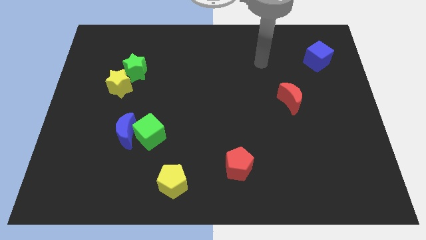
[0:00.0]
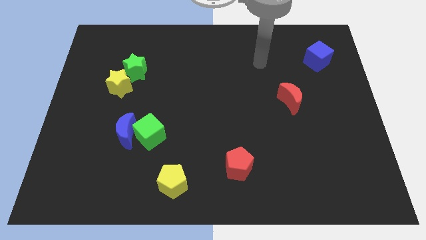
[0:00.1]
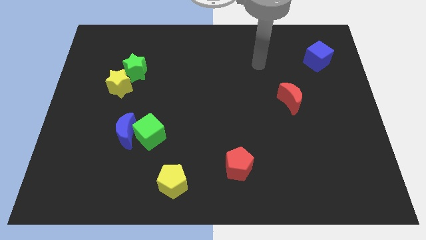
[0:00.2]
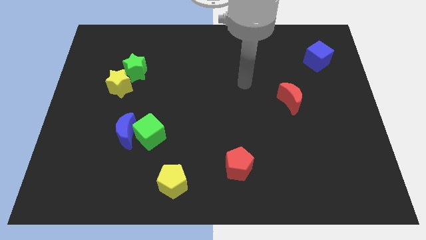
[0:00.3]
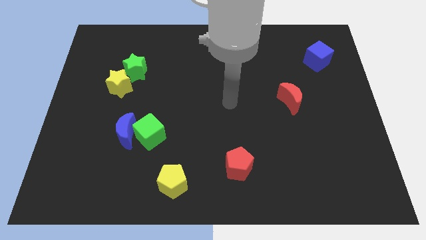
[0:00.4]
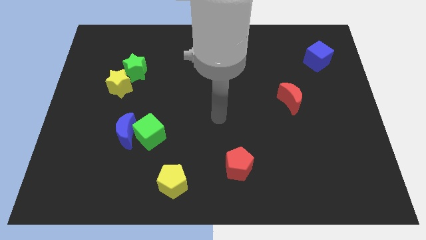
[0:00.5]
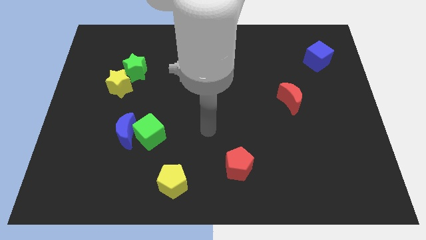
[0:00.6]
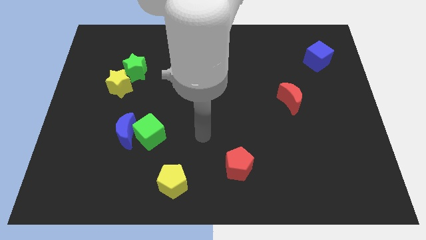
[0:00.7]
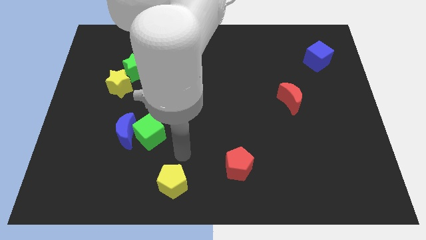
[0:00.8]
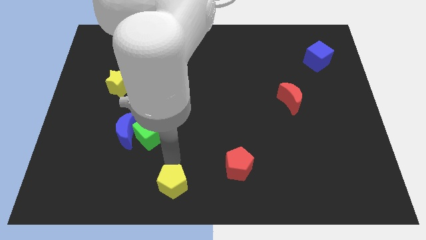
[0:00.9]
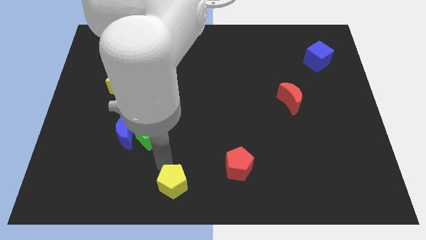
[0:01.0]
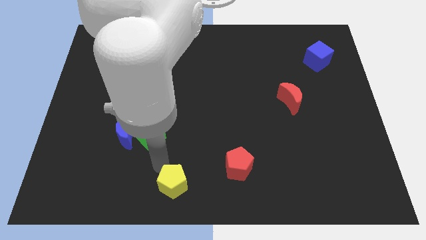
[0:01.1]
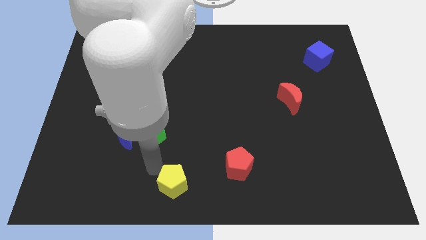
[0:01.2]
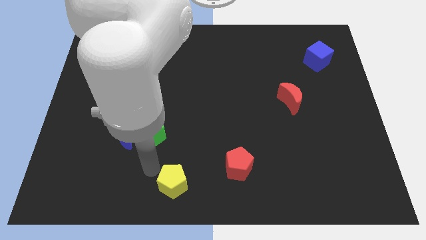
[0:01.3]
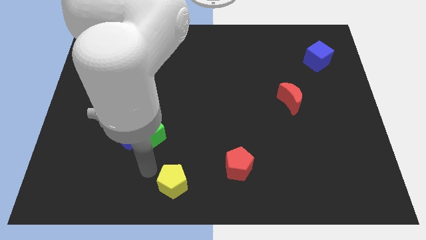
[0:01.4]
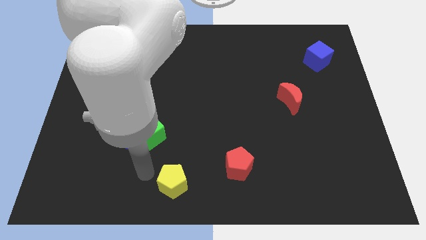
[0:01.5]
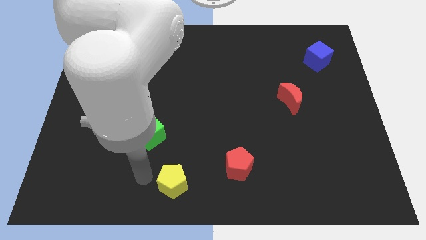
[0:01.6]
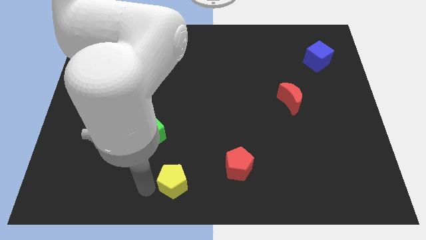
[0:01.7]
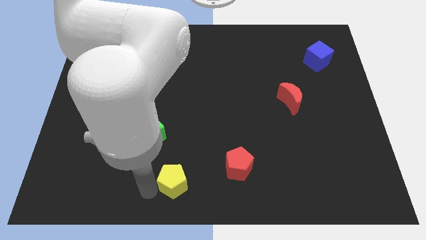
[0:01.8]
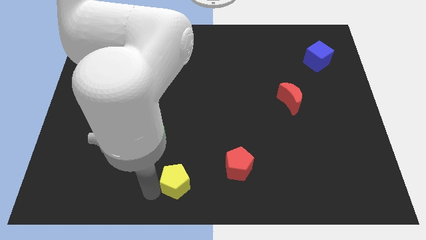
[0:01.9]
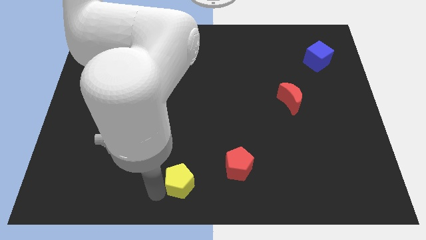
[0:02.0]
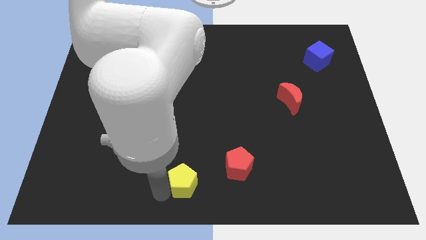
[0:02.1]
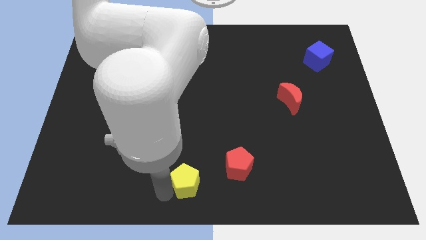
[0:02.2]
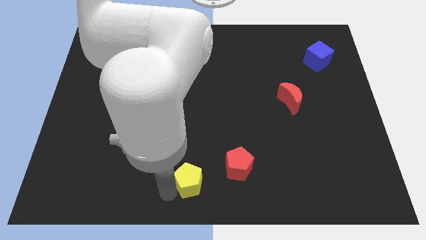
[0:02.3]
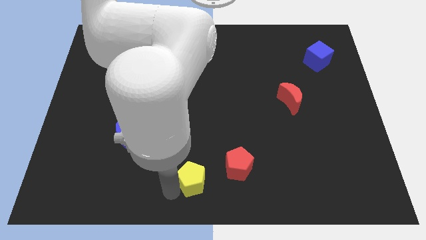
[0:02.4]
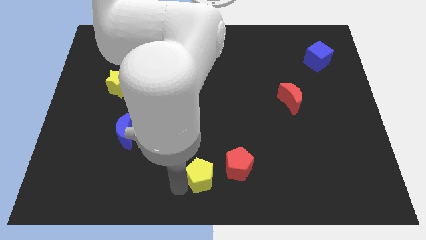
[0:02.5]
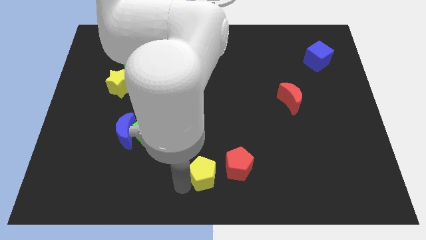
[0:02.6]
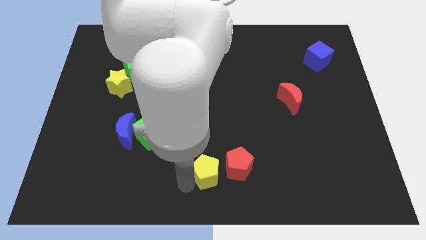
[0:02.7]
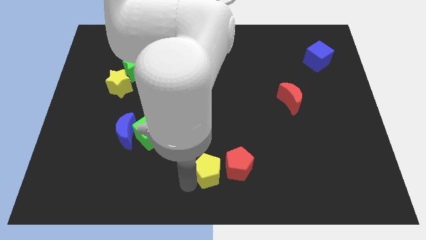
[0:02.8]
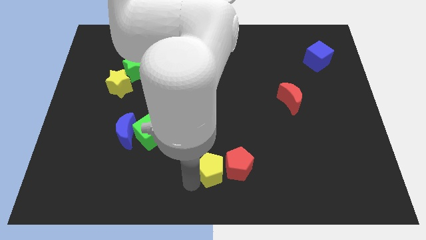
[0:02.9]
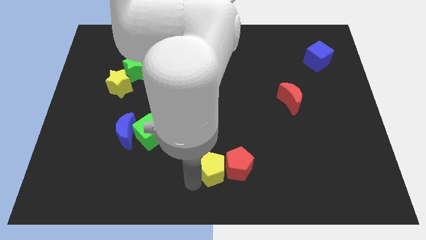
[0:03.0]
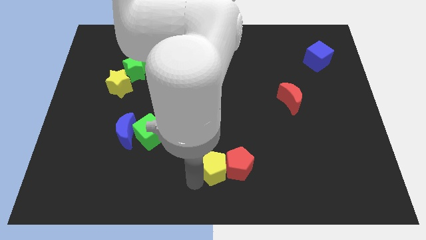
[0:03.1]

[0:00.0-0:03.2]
slide the yellow pentagon towards the red pentagon

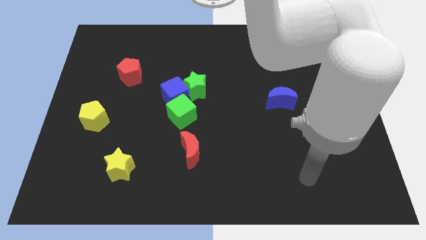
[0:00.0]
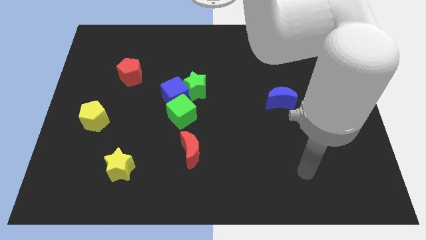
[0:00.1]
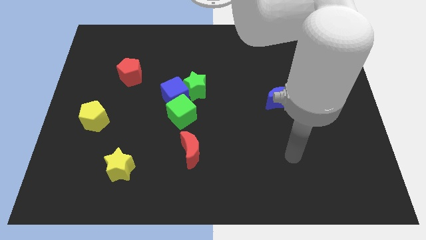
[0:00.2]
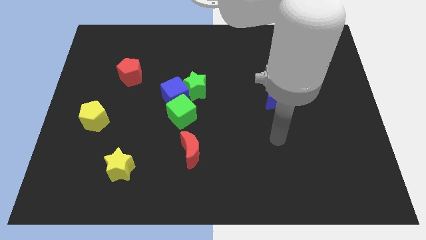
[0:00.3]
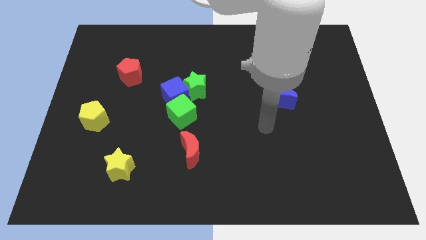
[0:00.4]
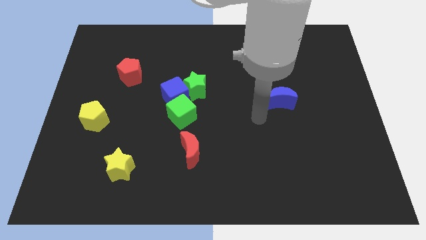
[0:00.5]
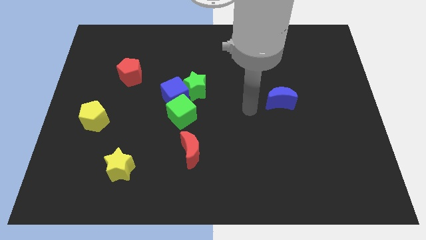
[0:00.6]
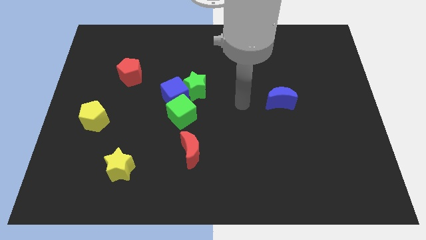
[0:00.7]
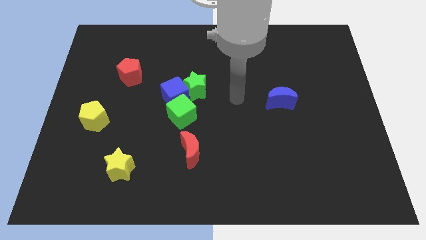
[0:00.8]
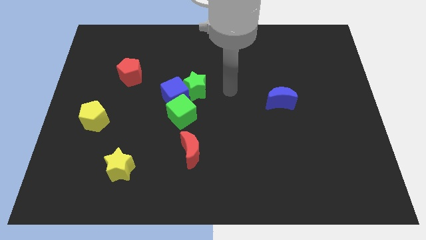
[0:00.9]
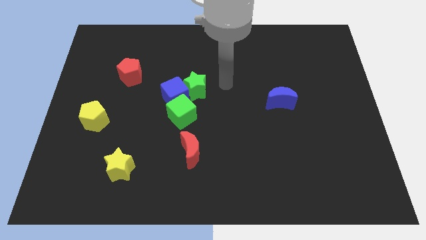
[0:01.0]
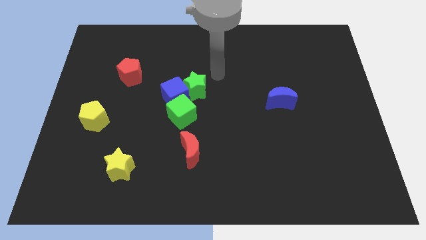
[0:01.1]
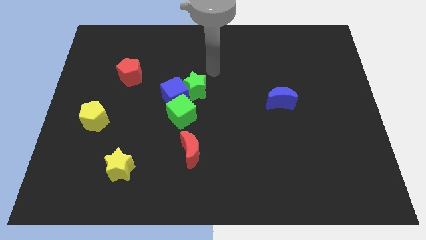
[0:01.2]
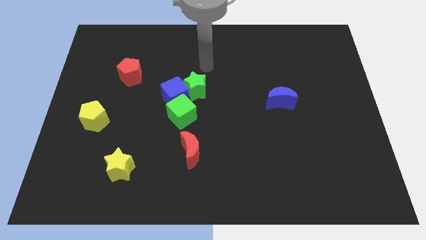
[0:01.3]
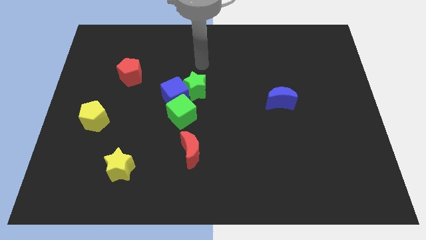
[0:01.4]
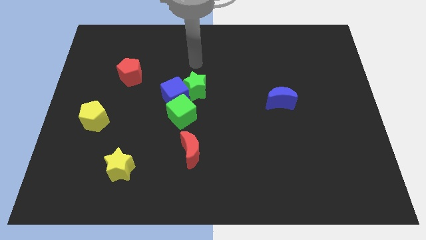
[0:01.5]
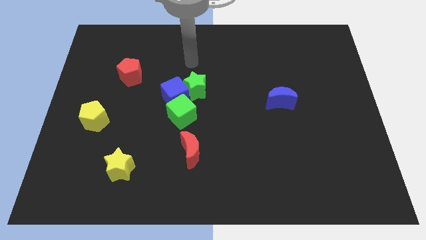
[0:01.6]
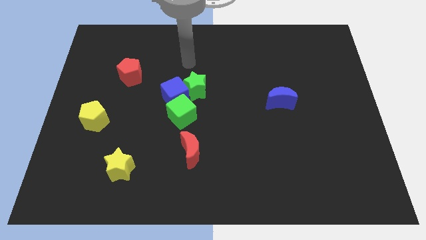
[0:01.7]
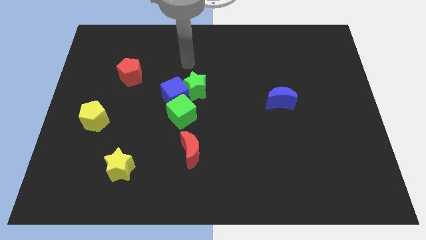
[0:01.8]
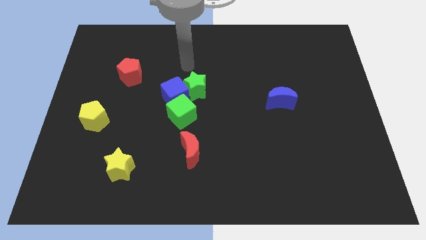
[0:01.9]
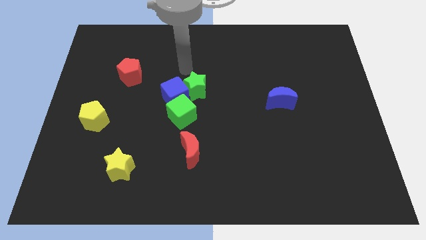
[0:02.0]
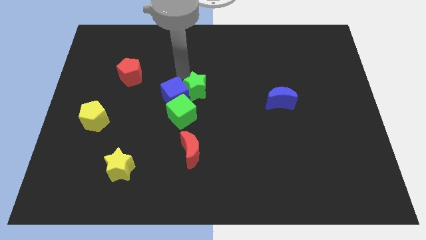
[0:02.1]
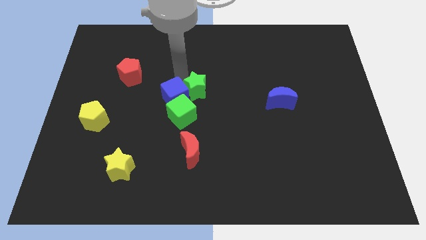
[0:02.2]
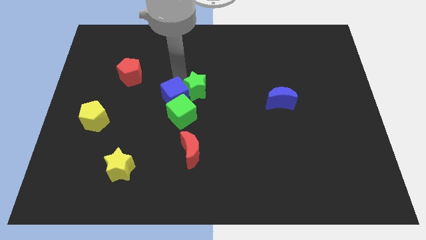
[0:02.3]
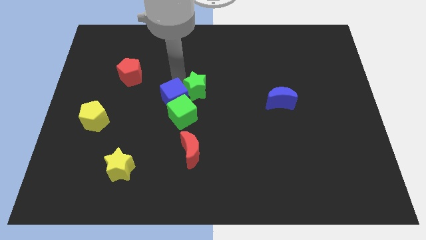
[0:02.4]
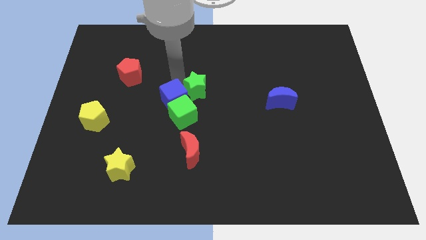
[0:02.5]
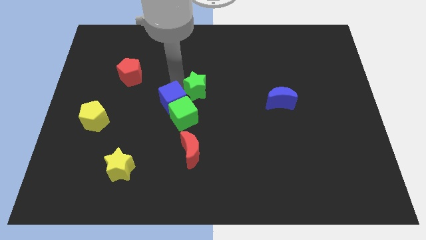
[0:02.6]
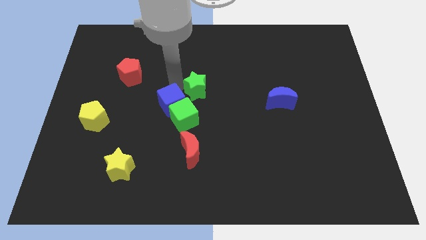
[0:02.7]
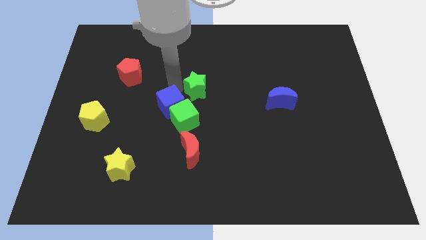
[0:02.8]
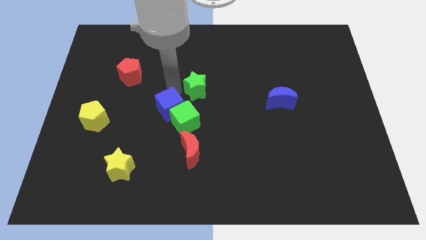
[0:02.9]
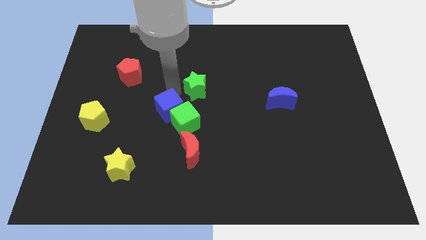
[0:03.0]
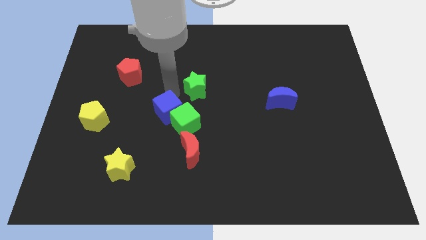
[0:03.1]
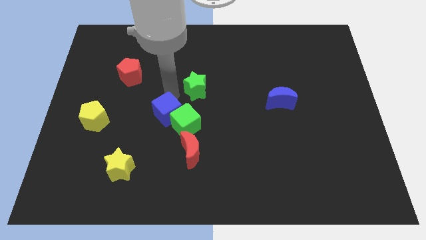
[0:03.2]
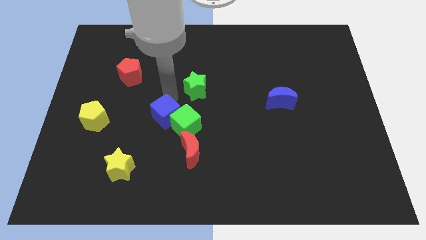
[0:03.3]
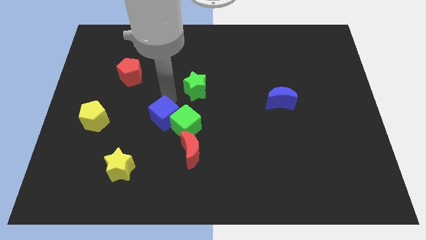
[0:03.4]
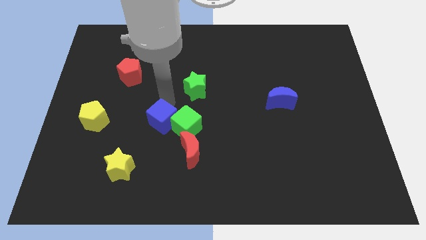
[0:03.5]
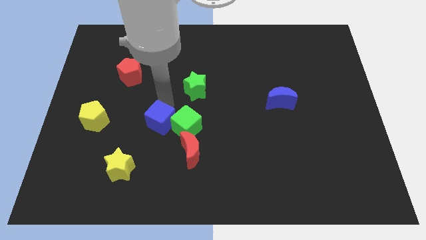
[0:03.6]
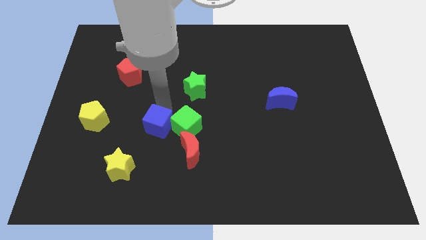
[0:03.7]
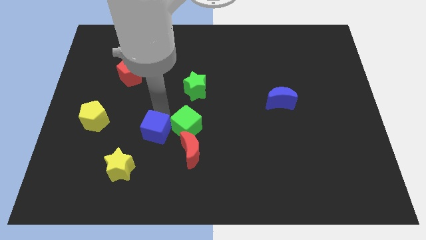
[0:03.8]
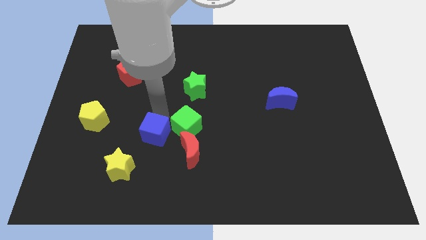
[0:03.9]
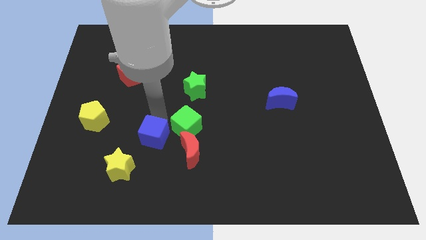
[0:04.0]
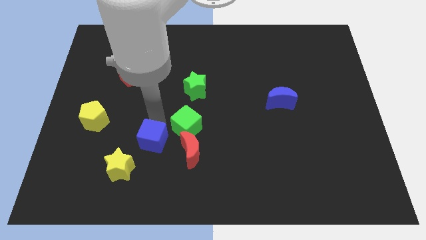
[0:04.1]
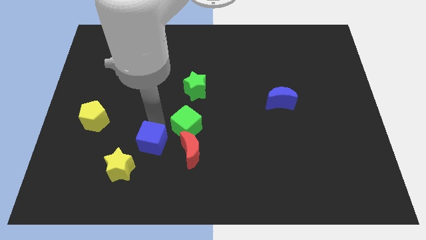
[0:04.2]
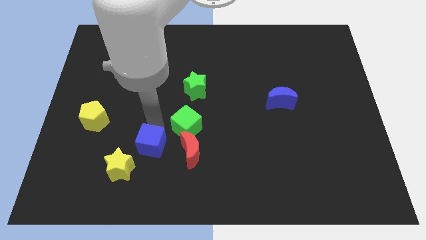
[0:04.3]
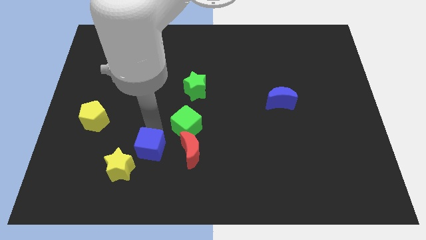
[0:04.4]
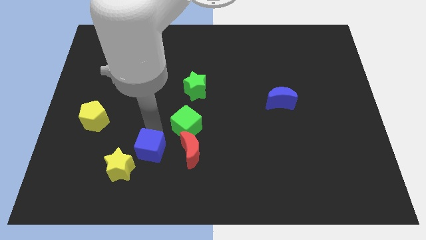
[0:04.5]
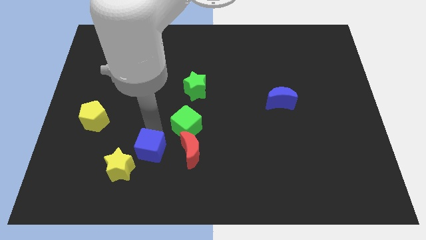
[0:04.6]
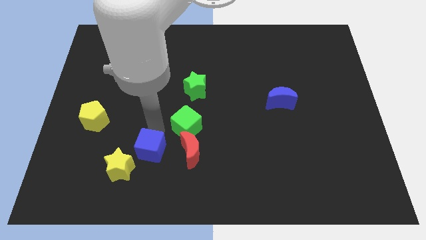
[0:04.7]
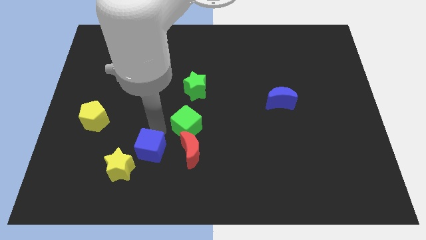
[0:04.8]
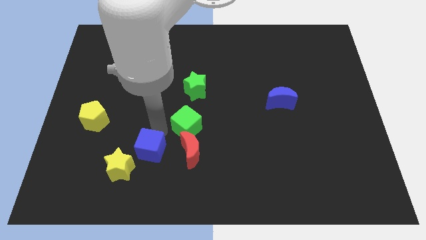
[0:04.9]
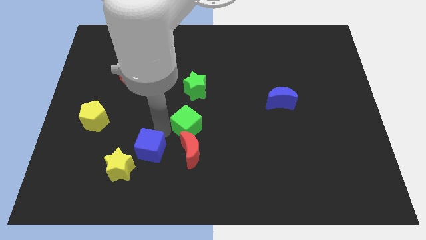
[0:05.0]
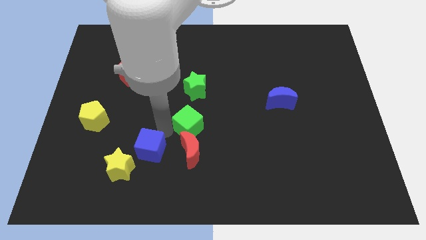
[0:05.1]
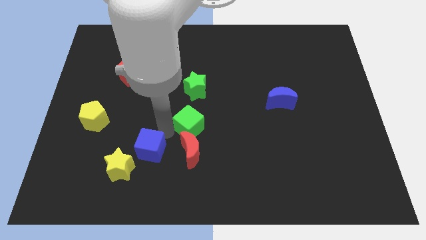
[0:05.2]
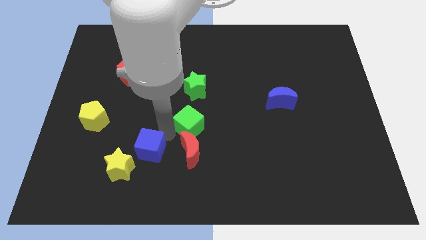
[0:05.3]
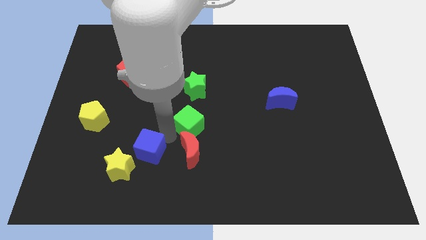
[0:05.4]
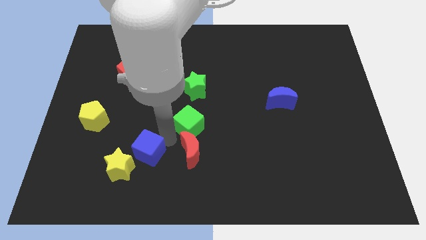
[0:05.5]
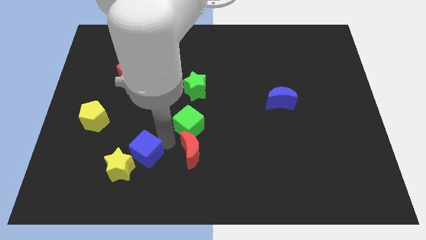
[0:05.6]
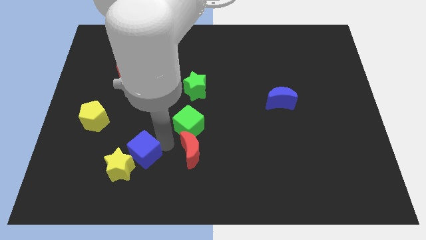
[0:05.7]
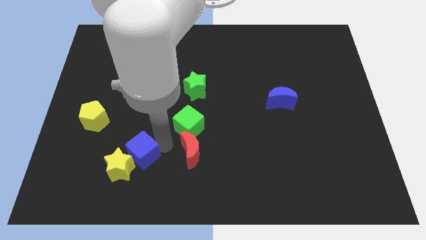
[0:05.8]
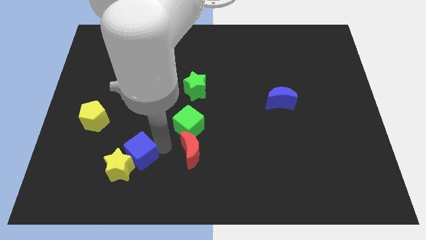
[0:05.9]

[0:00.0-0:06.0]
move the blue cube towards the yellow star
